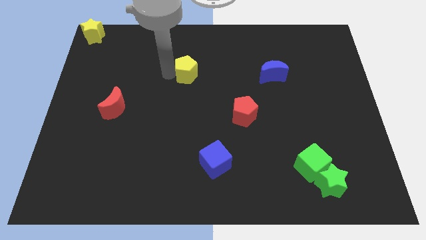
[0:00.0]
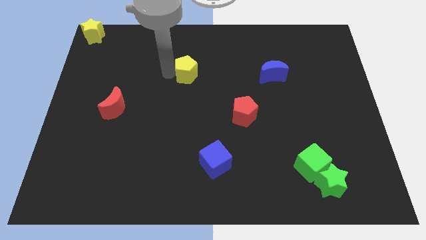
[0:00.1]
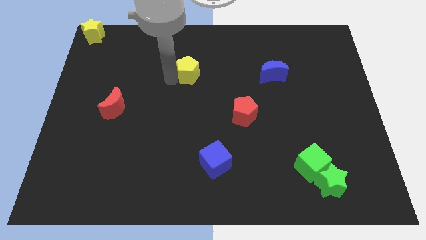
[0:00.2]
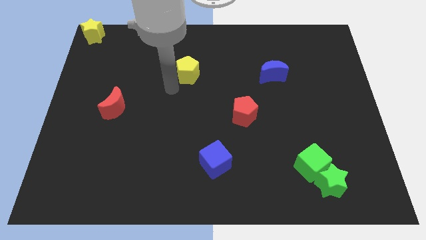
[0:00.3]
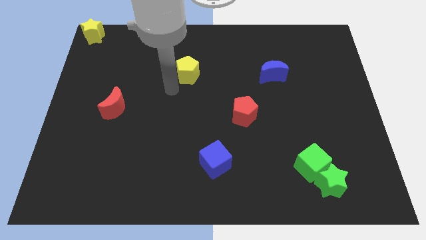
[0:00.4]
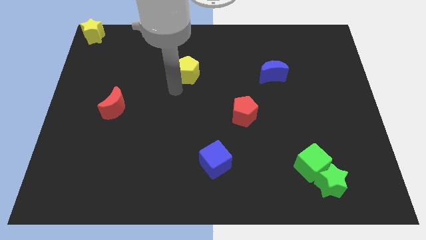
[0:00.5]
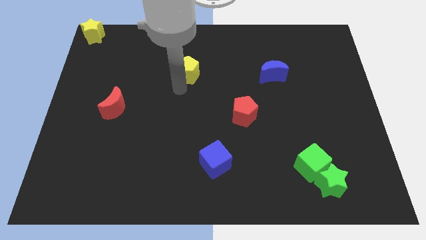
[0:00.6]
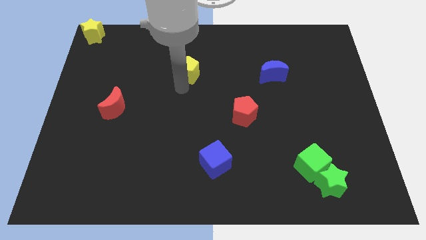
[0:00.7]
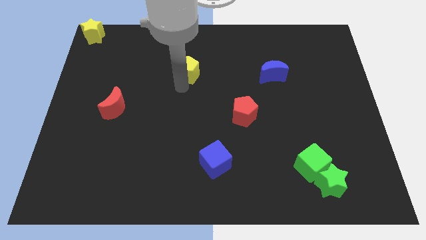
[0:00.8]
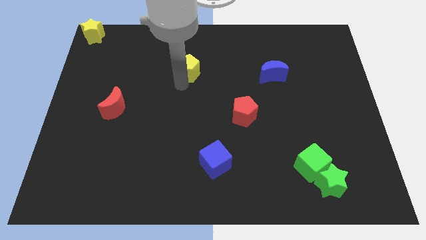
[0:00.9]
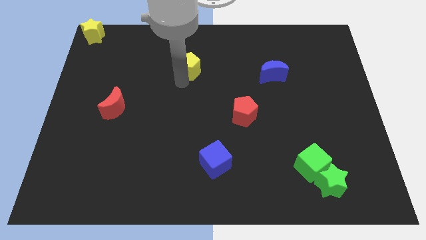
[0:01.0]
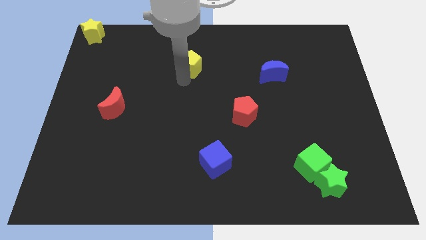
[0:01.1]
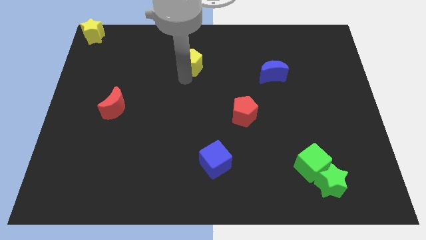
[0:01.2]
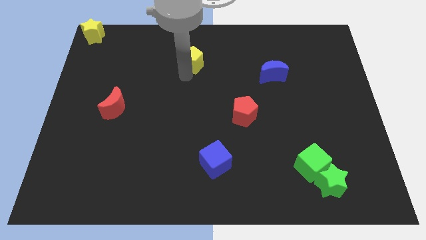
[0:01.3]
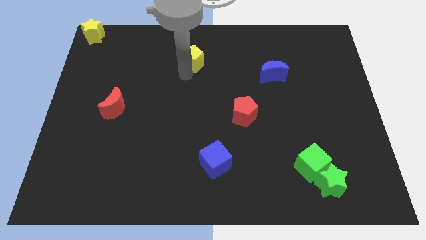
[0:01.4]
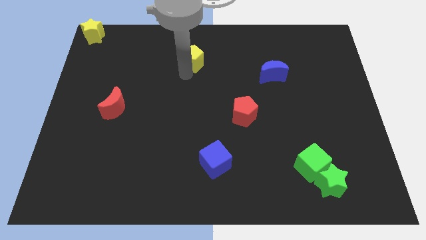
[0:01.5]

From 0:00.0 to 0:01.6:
move the yellow pentagon towards the top center

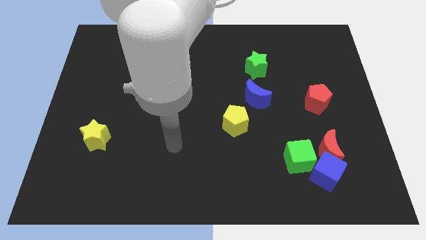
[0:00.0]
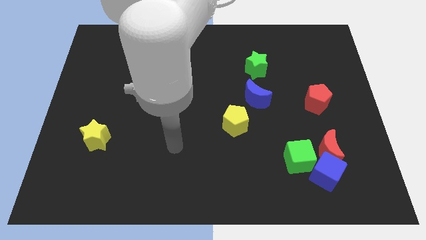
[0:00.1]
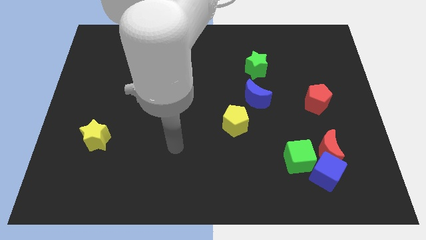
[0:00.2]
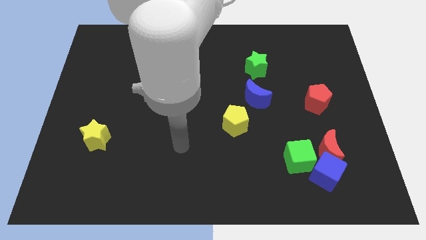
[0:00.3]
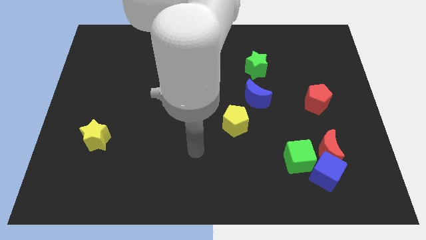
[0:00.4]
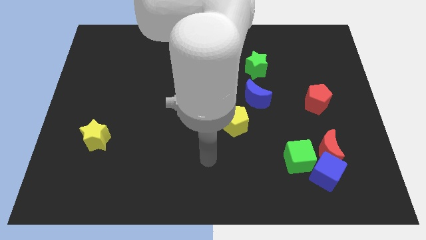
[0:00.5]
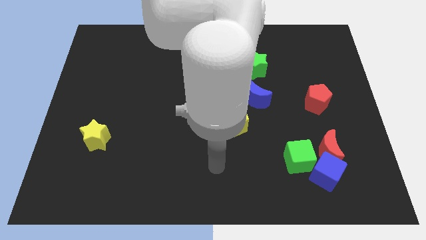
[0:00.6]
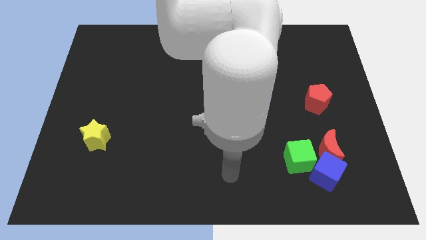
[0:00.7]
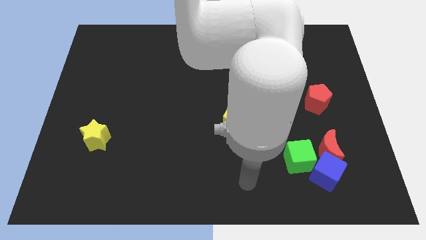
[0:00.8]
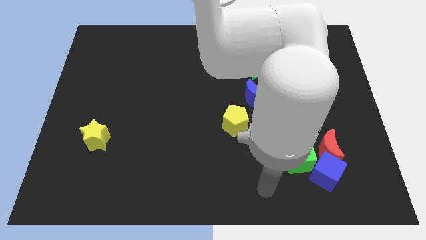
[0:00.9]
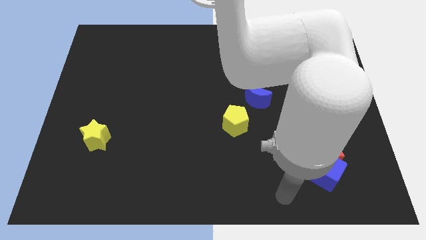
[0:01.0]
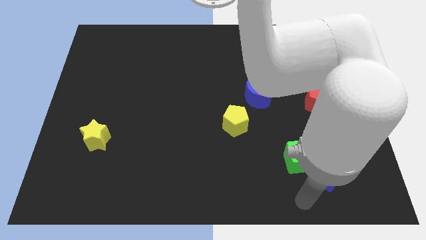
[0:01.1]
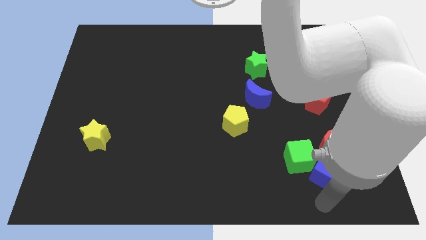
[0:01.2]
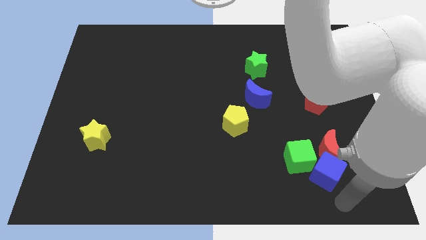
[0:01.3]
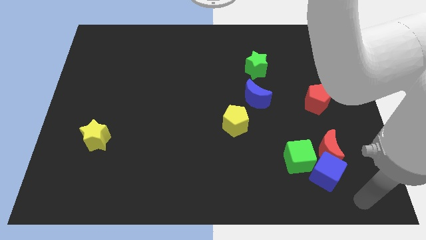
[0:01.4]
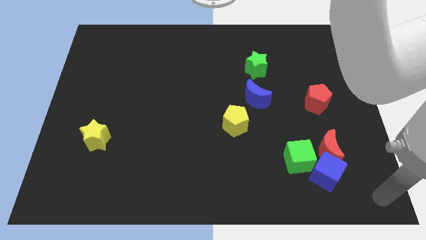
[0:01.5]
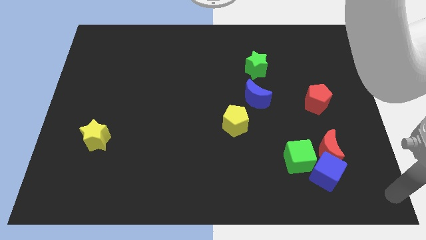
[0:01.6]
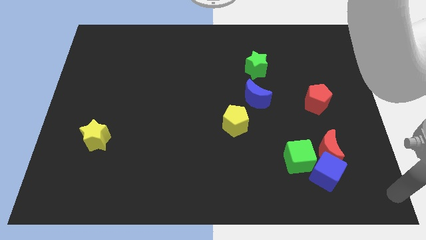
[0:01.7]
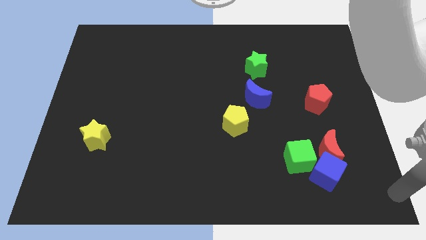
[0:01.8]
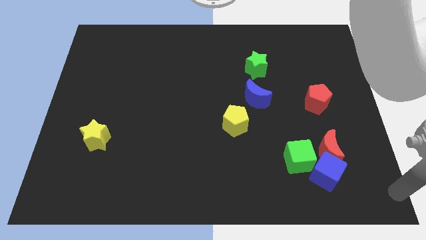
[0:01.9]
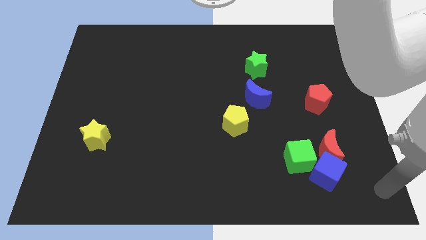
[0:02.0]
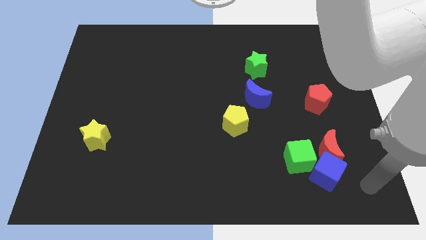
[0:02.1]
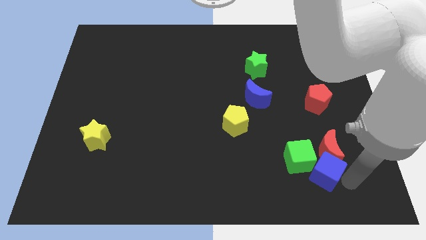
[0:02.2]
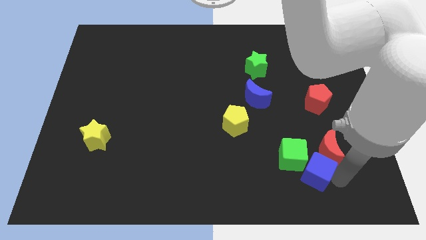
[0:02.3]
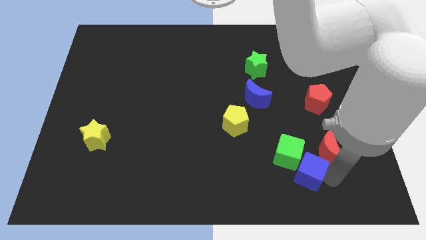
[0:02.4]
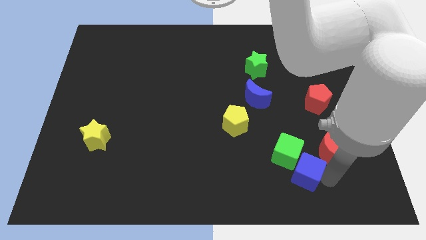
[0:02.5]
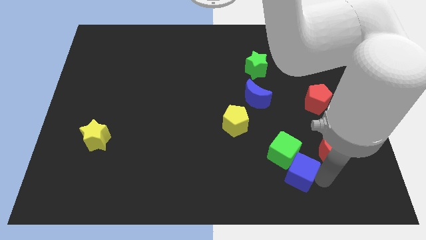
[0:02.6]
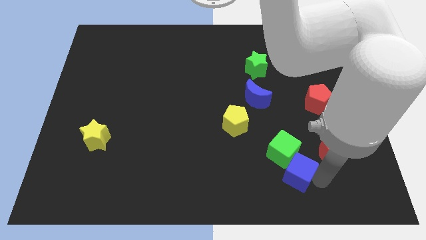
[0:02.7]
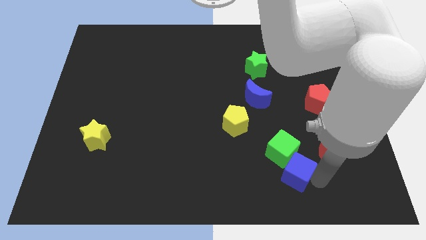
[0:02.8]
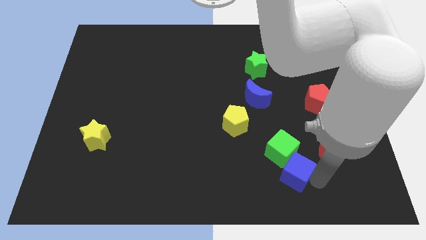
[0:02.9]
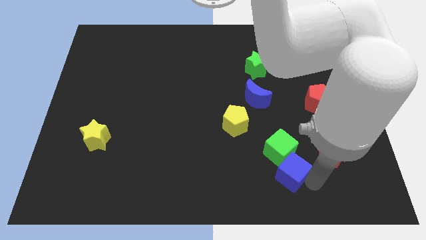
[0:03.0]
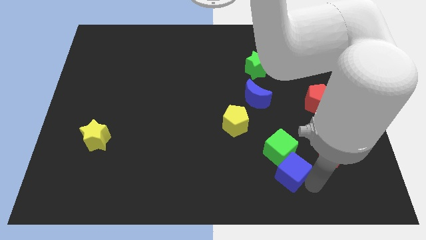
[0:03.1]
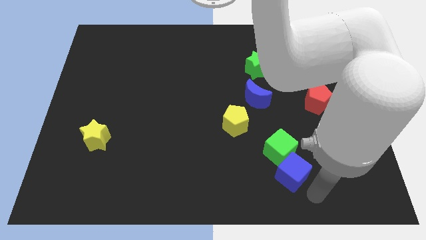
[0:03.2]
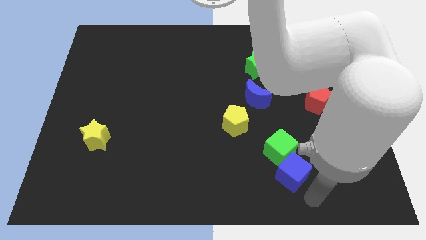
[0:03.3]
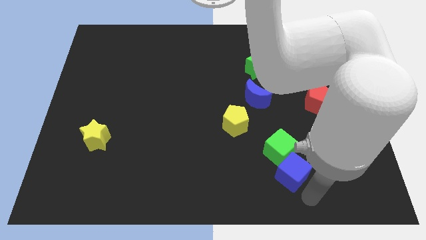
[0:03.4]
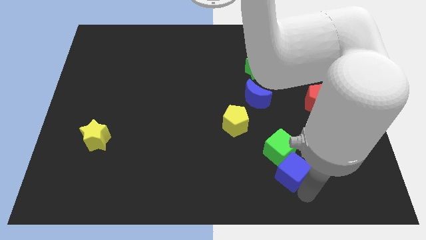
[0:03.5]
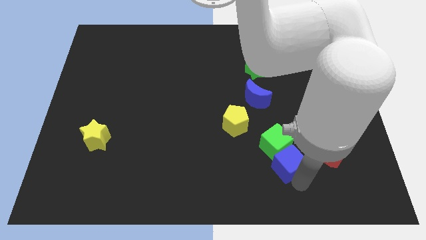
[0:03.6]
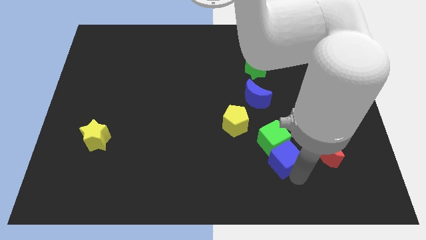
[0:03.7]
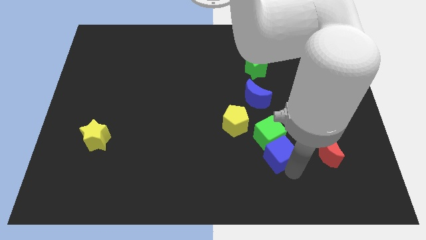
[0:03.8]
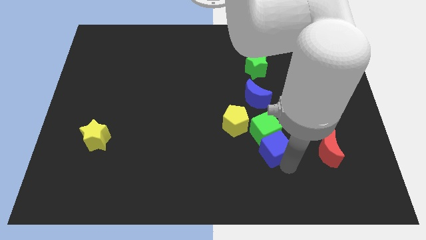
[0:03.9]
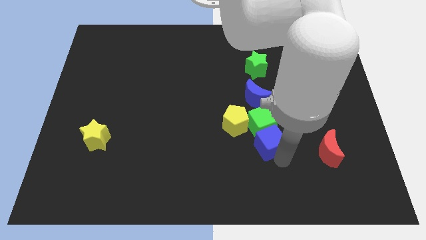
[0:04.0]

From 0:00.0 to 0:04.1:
push the blue cube below the green cube

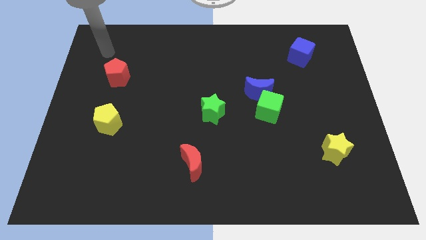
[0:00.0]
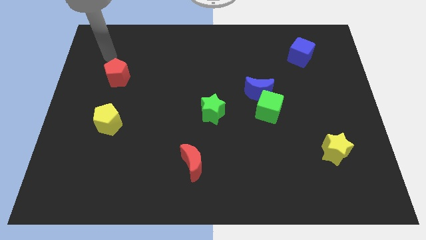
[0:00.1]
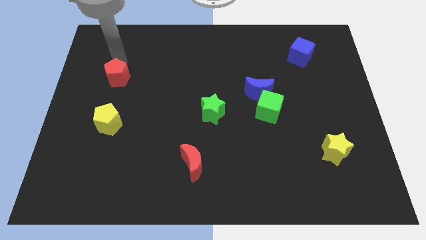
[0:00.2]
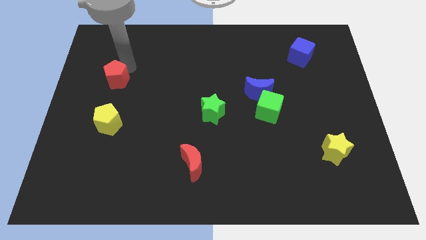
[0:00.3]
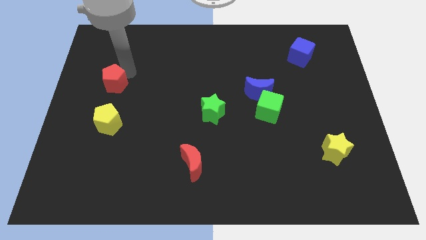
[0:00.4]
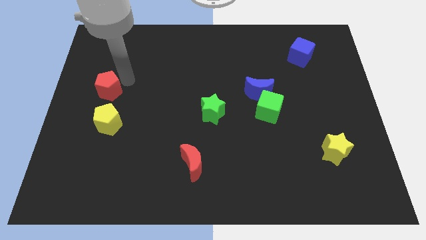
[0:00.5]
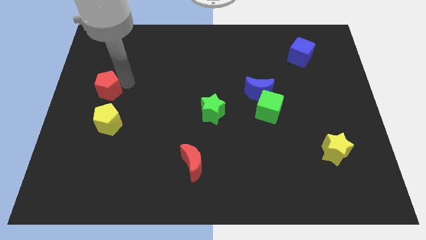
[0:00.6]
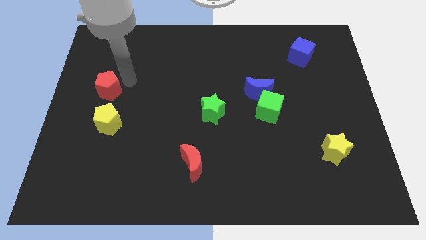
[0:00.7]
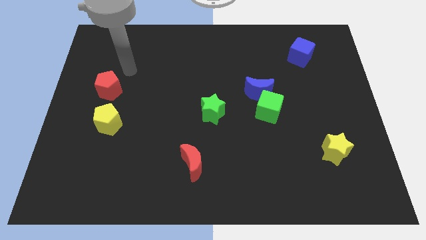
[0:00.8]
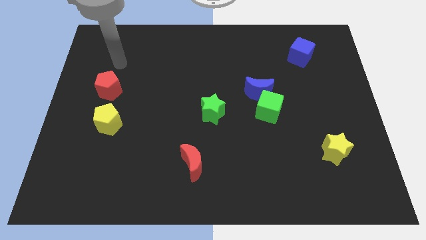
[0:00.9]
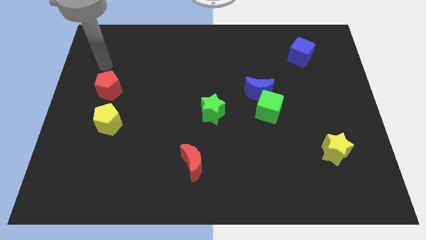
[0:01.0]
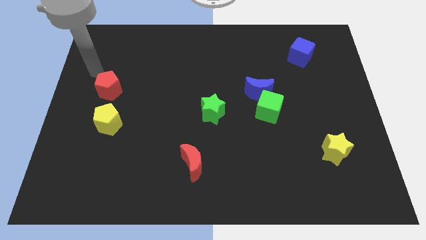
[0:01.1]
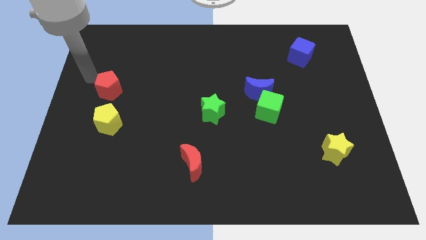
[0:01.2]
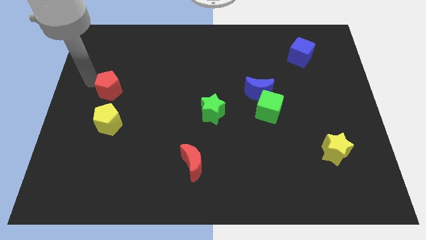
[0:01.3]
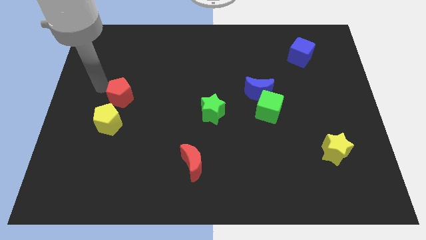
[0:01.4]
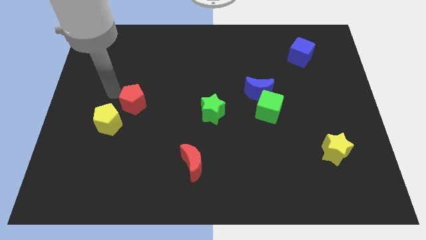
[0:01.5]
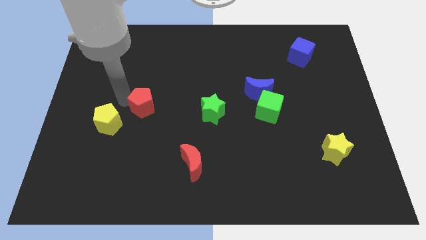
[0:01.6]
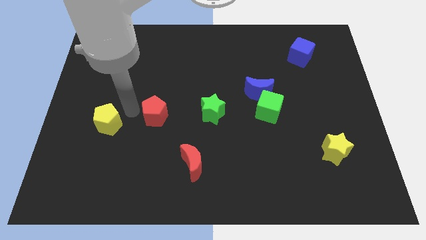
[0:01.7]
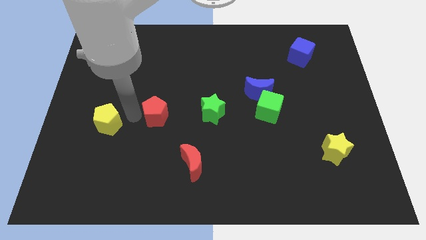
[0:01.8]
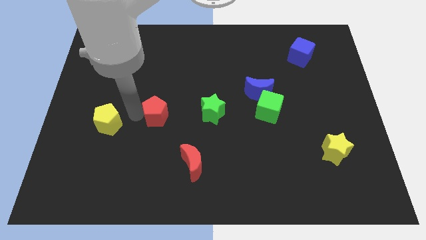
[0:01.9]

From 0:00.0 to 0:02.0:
place the red pentagon to the right of yellow pentagon

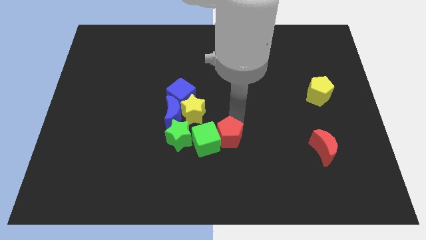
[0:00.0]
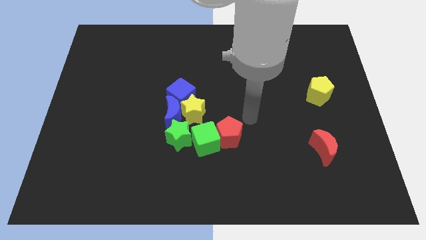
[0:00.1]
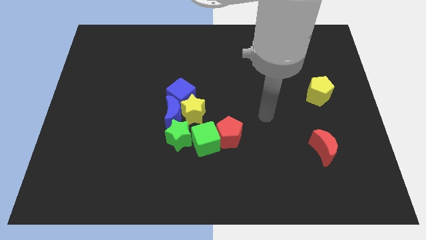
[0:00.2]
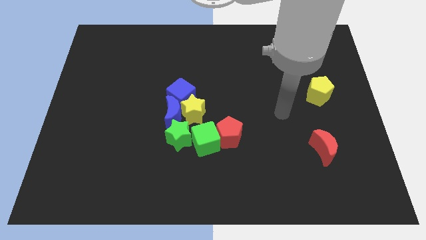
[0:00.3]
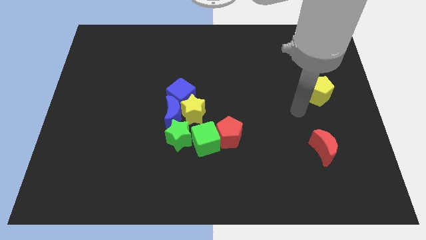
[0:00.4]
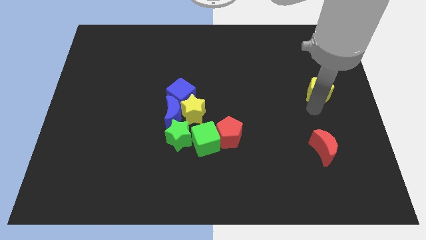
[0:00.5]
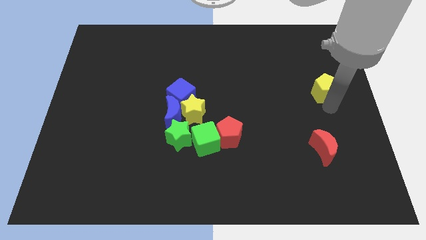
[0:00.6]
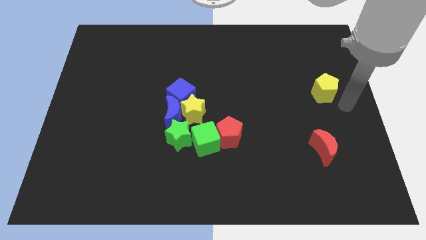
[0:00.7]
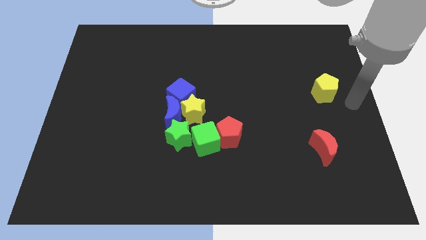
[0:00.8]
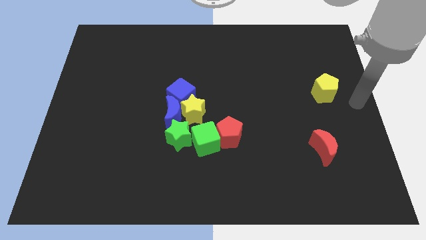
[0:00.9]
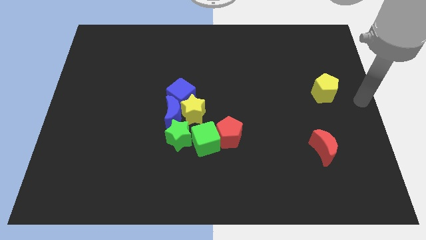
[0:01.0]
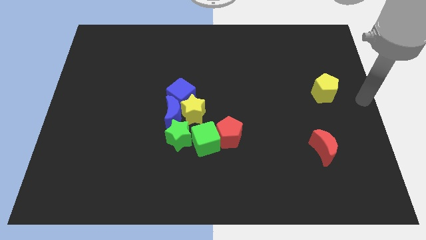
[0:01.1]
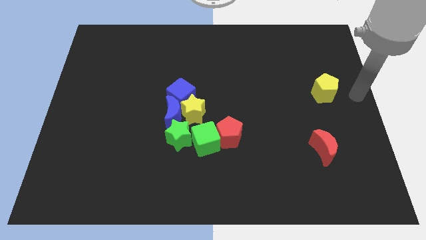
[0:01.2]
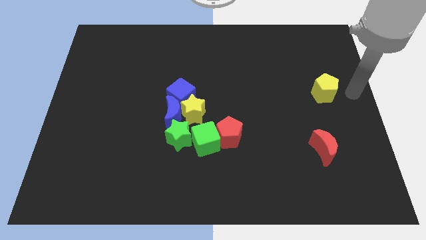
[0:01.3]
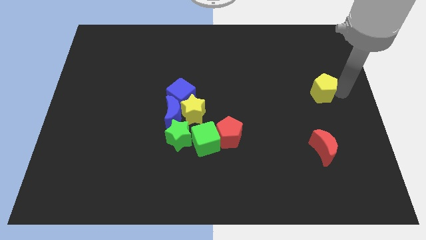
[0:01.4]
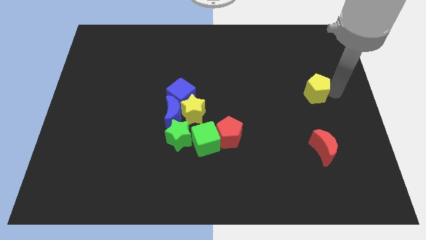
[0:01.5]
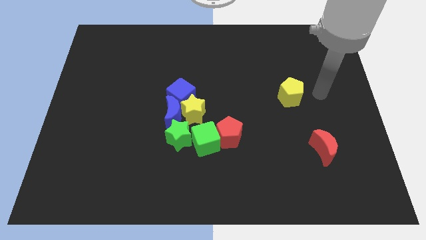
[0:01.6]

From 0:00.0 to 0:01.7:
move yellow pentagon towards the group of blocks
